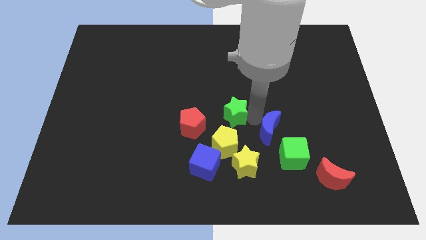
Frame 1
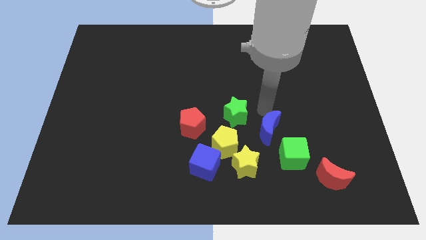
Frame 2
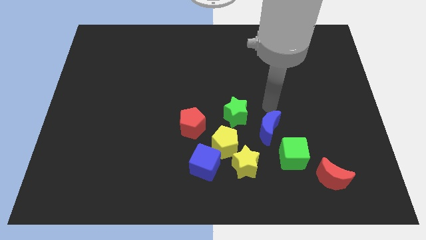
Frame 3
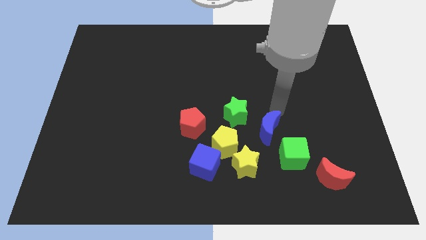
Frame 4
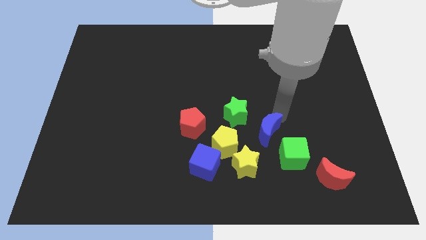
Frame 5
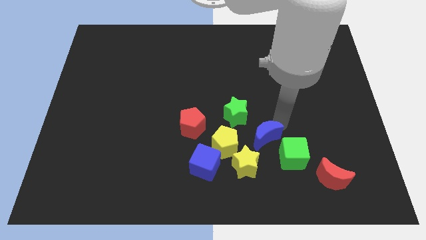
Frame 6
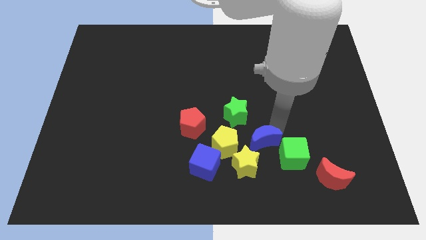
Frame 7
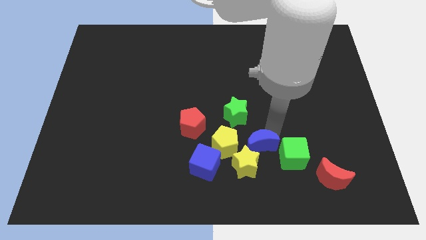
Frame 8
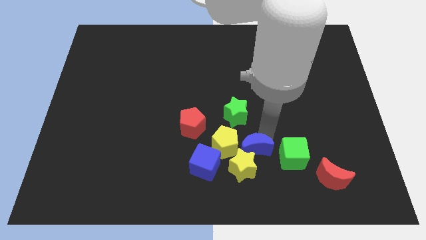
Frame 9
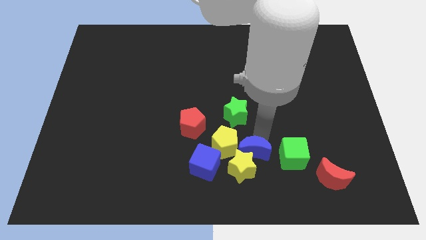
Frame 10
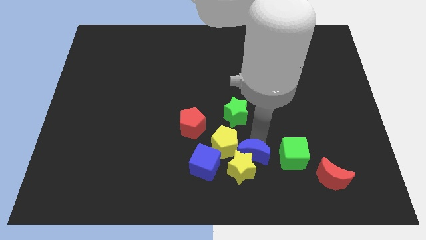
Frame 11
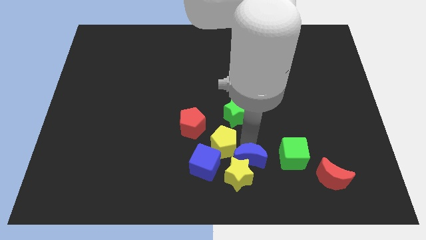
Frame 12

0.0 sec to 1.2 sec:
push blue moon into the yellow star

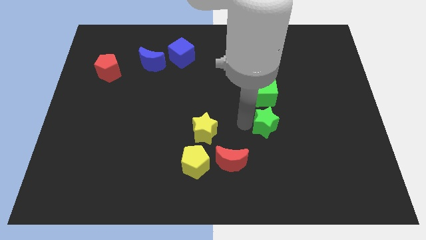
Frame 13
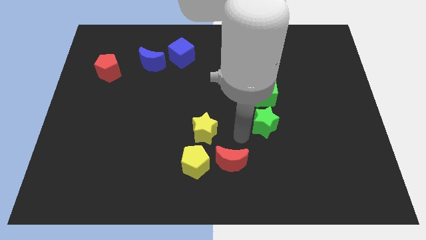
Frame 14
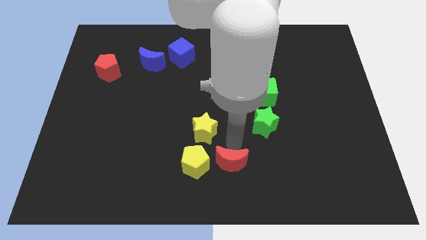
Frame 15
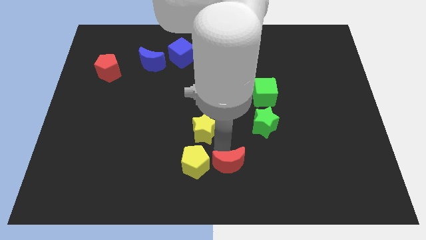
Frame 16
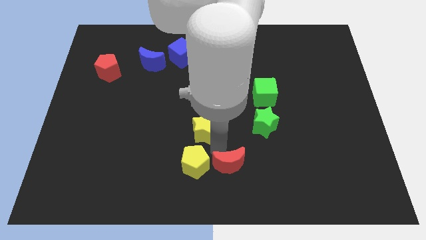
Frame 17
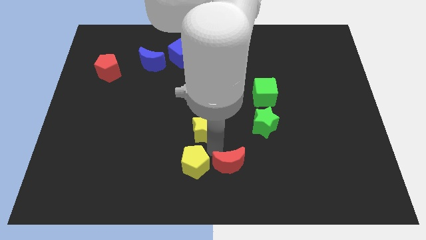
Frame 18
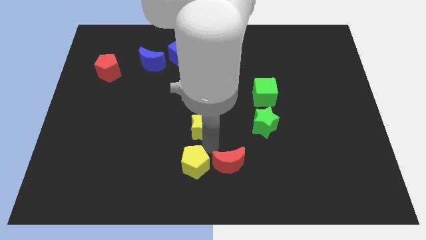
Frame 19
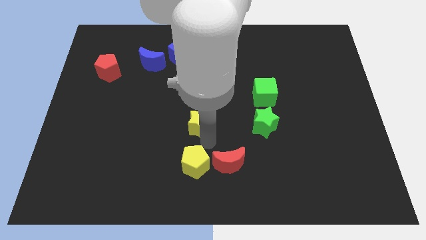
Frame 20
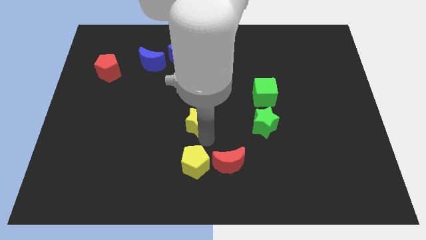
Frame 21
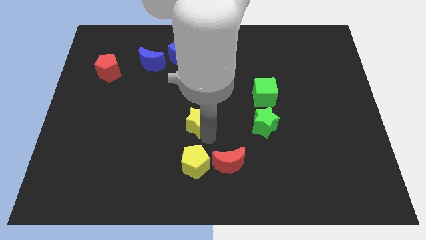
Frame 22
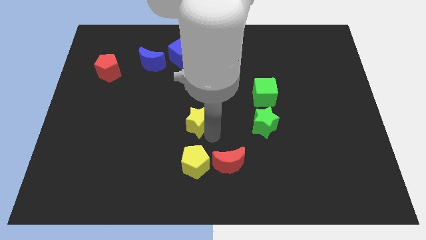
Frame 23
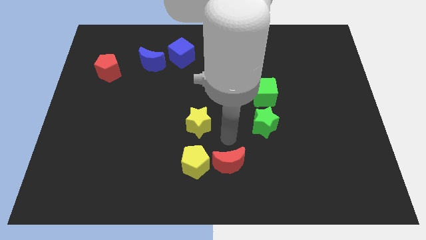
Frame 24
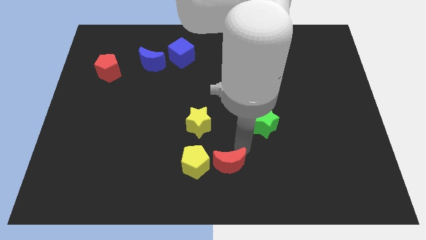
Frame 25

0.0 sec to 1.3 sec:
move yellow star slightly towards upwards

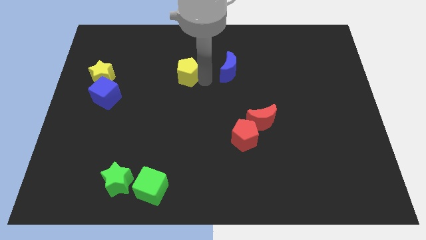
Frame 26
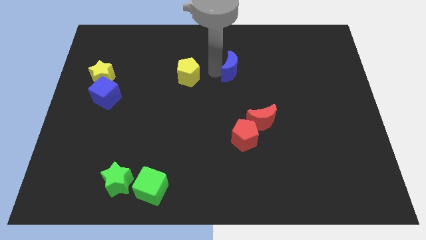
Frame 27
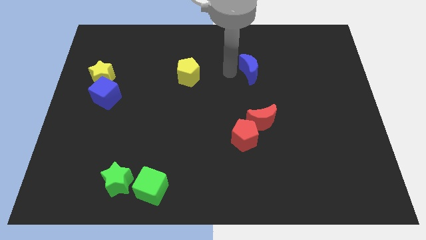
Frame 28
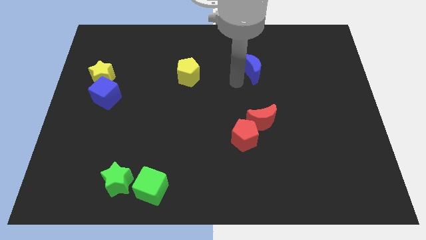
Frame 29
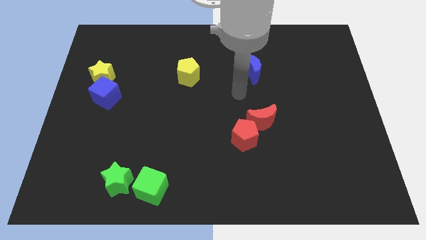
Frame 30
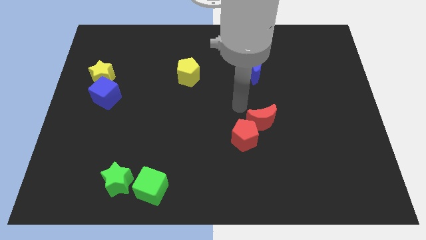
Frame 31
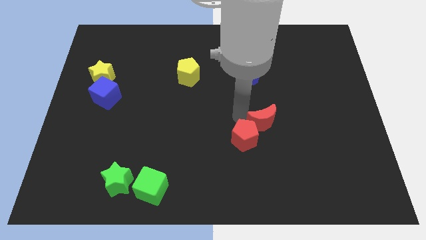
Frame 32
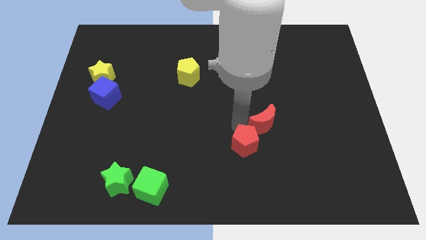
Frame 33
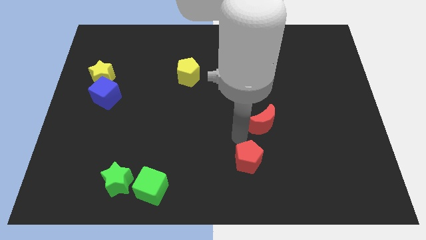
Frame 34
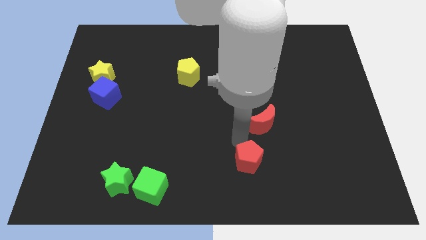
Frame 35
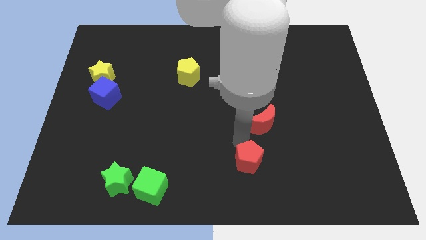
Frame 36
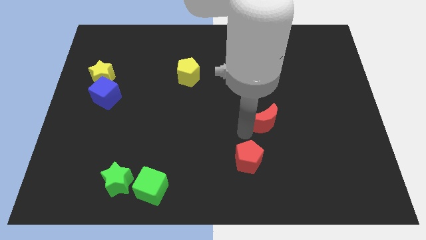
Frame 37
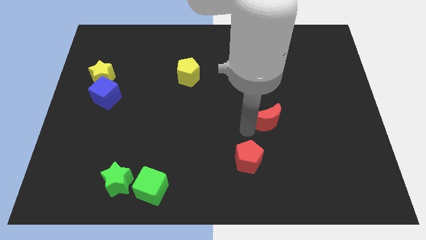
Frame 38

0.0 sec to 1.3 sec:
push the blue moon to the right

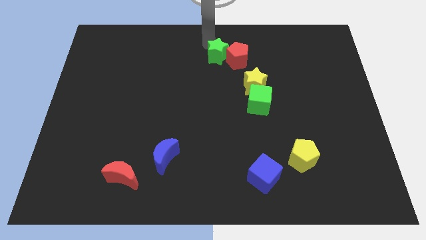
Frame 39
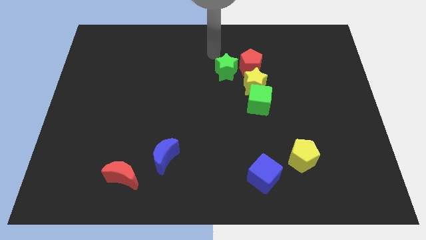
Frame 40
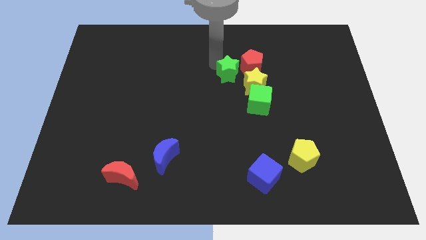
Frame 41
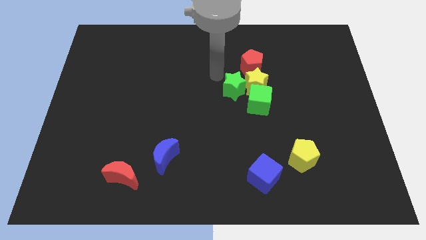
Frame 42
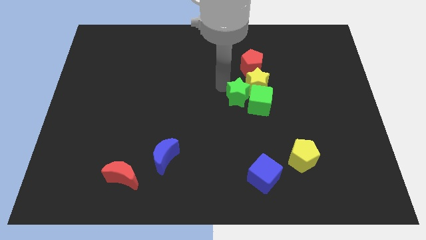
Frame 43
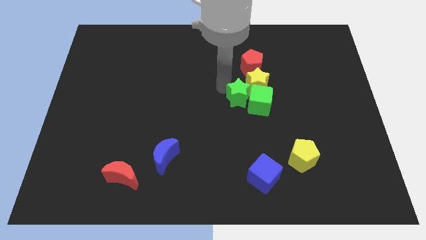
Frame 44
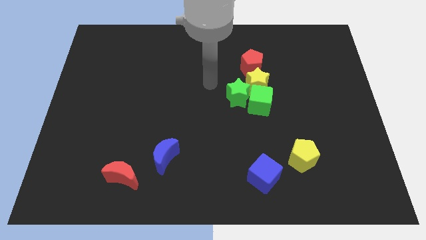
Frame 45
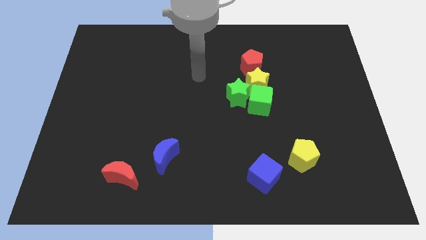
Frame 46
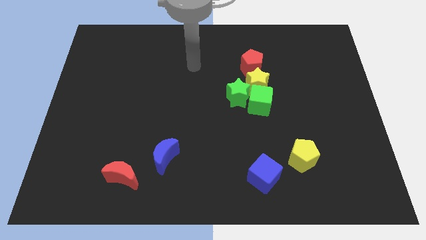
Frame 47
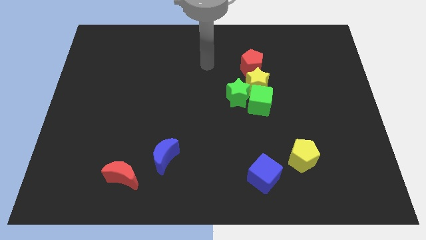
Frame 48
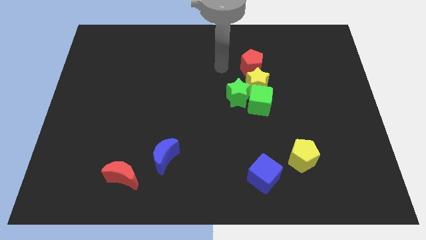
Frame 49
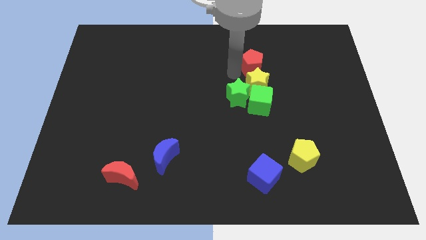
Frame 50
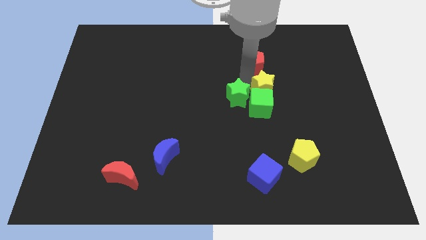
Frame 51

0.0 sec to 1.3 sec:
place the green star to the left of the green cube

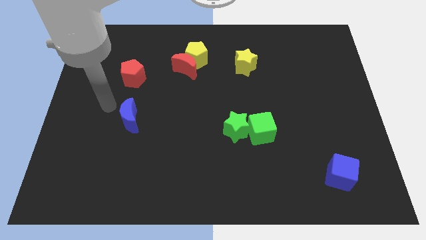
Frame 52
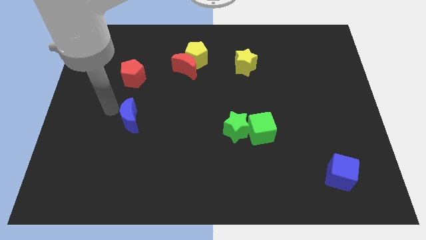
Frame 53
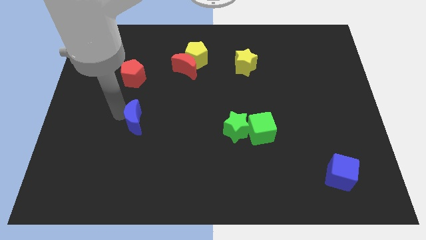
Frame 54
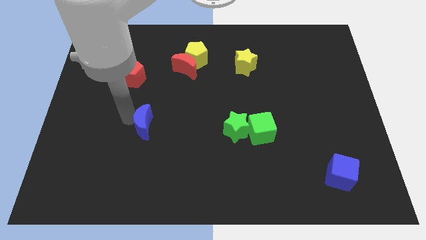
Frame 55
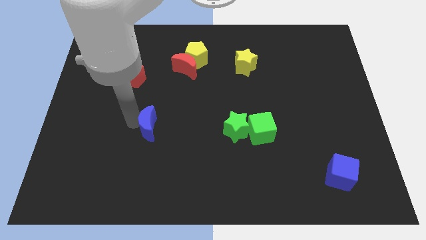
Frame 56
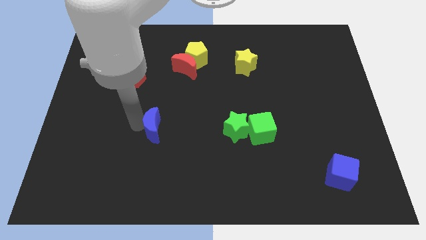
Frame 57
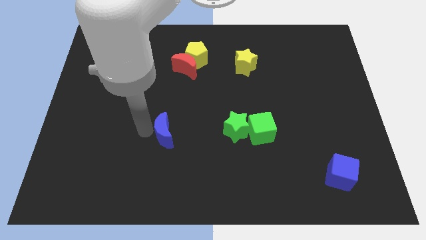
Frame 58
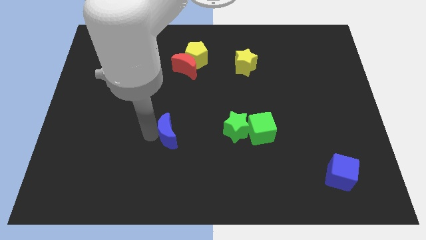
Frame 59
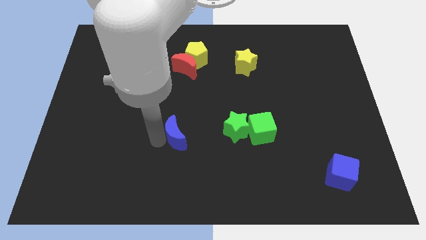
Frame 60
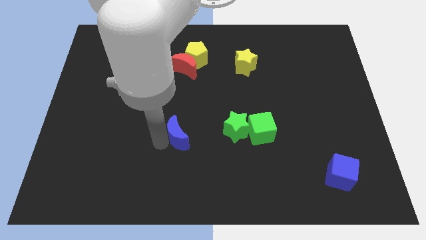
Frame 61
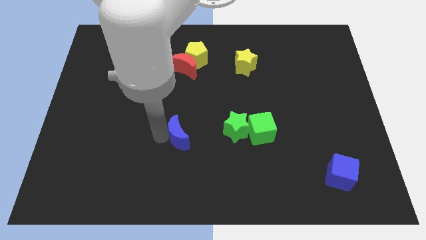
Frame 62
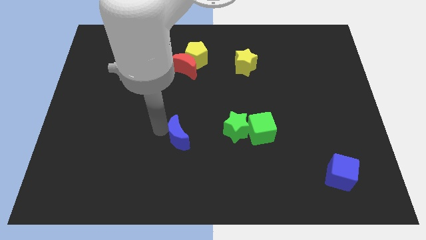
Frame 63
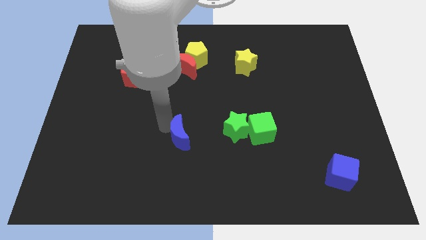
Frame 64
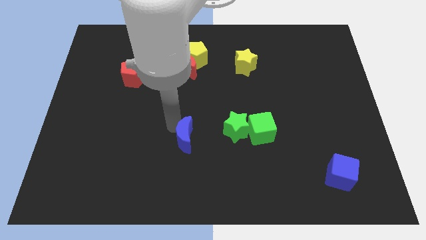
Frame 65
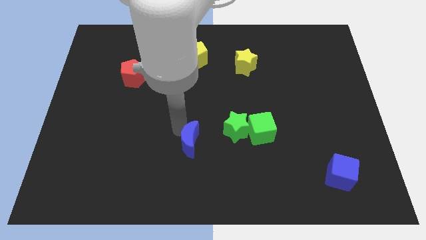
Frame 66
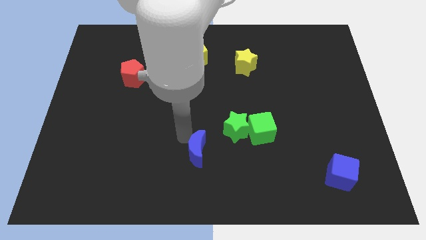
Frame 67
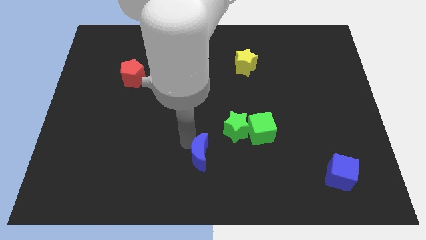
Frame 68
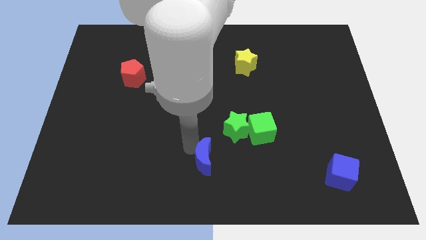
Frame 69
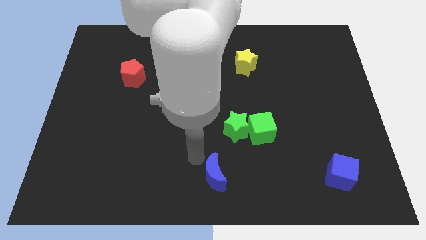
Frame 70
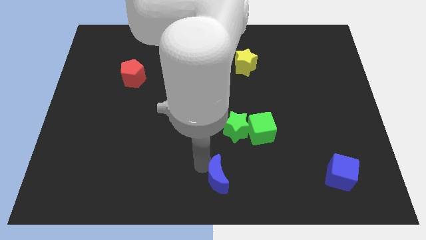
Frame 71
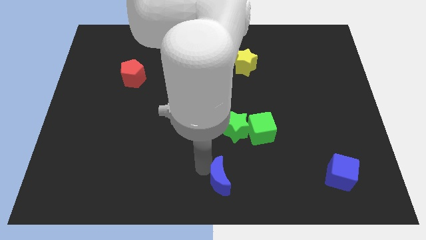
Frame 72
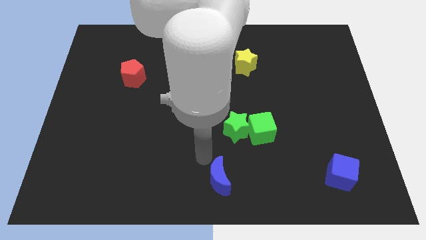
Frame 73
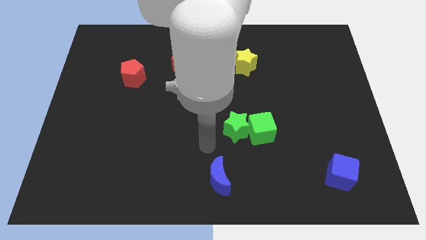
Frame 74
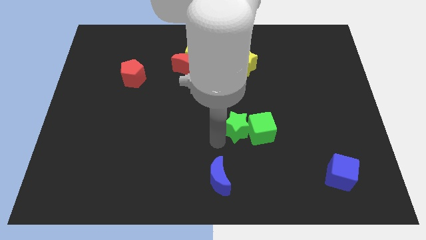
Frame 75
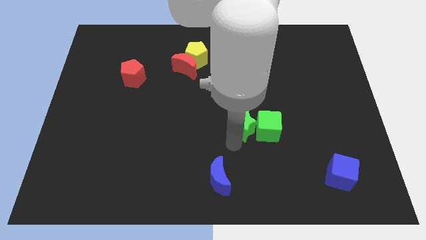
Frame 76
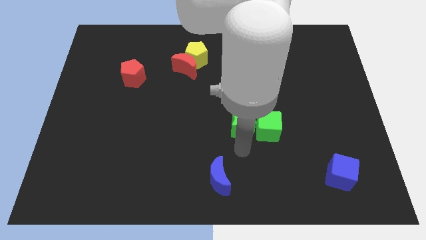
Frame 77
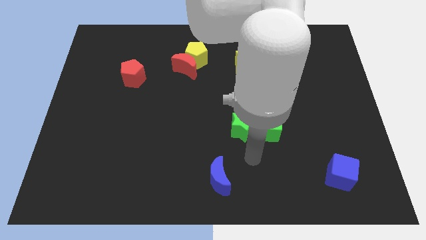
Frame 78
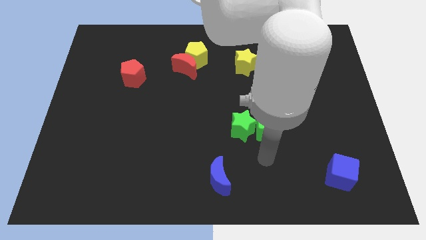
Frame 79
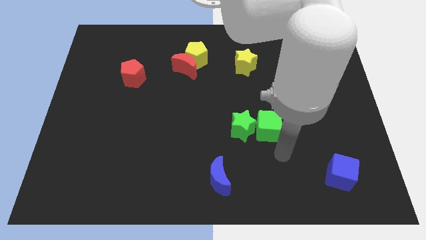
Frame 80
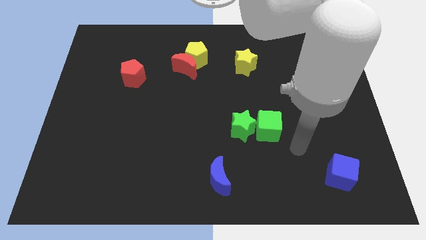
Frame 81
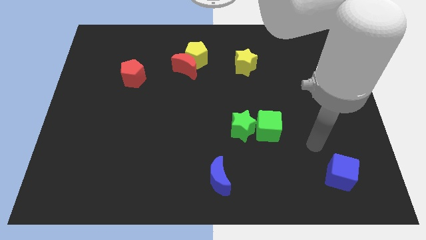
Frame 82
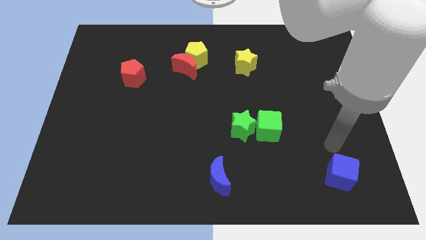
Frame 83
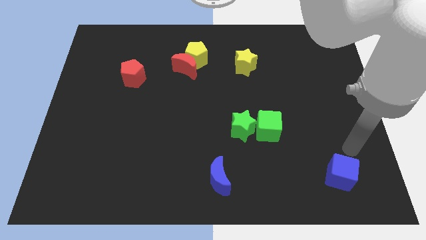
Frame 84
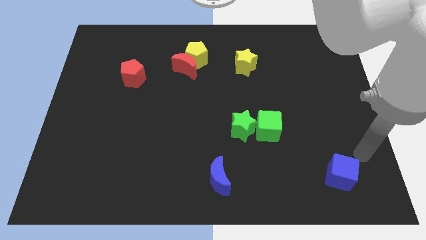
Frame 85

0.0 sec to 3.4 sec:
place the blue moon diagonally to the green star

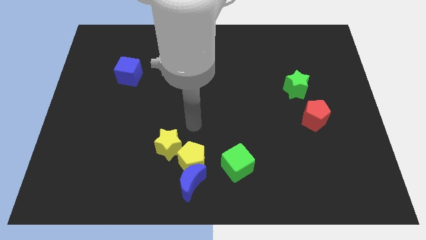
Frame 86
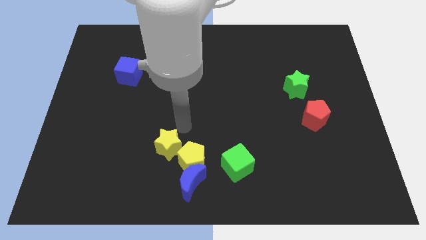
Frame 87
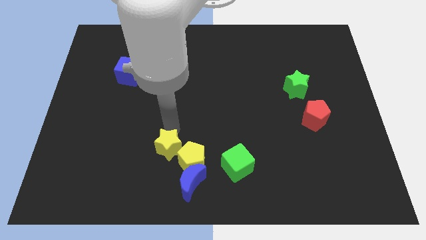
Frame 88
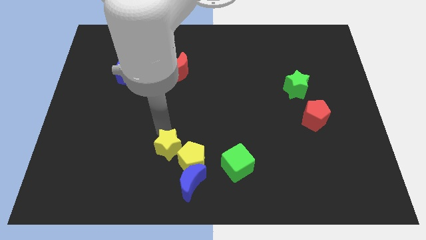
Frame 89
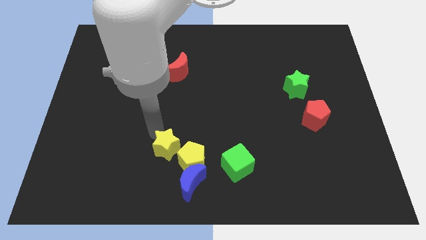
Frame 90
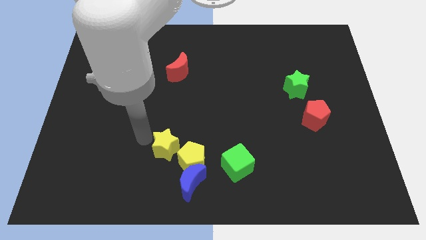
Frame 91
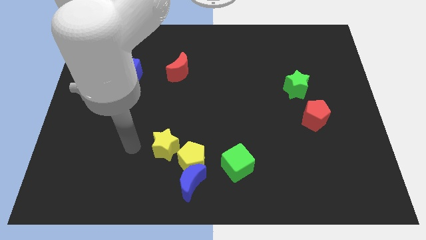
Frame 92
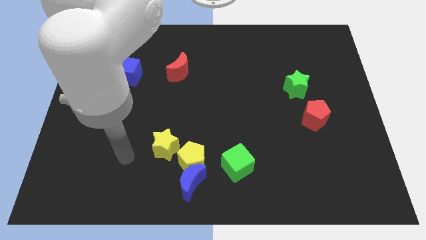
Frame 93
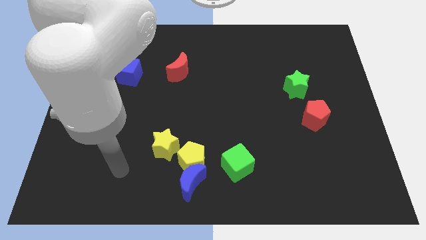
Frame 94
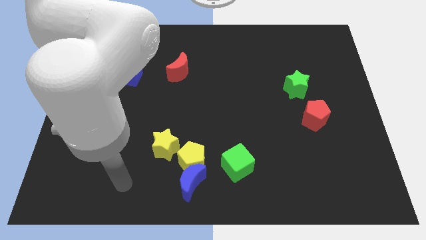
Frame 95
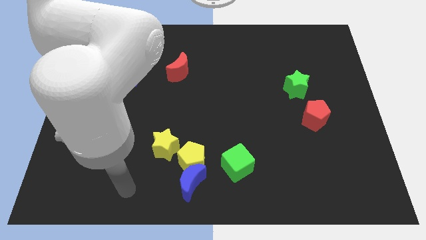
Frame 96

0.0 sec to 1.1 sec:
slightly touch the yellow star
